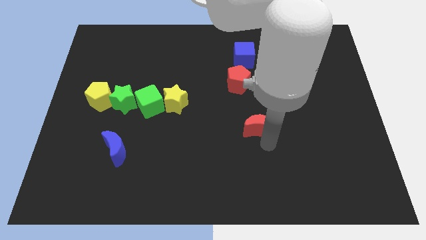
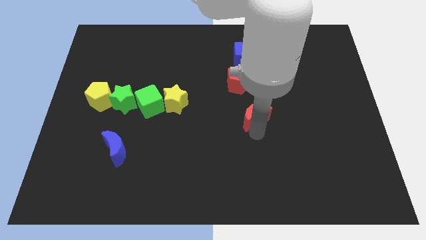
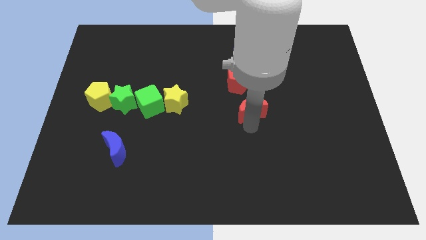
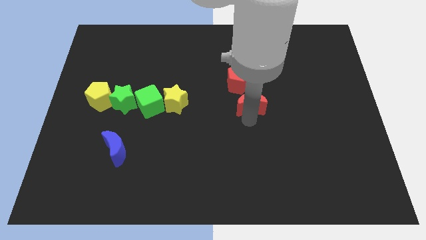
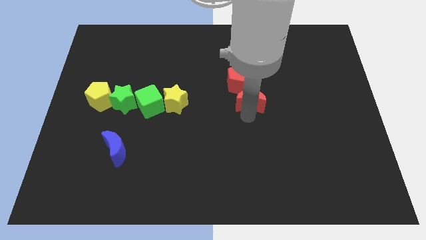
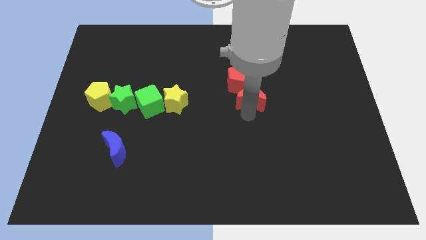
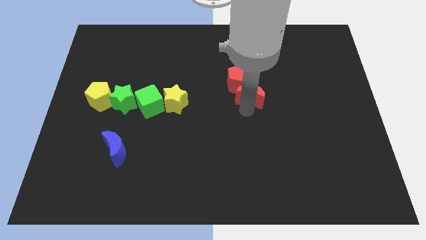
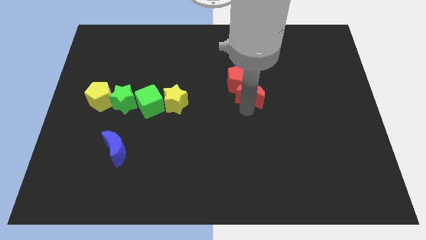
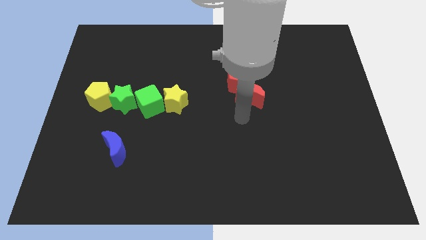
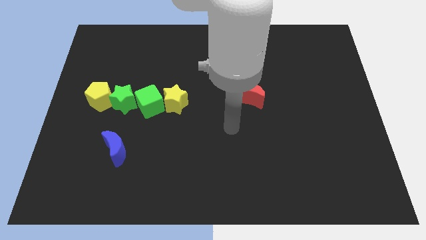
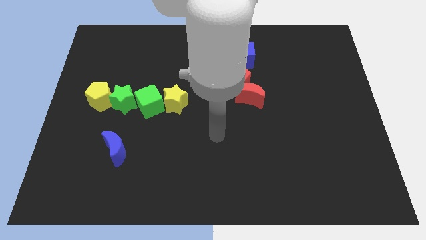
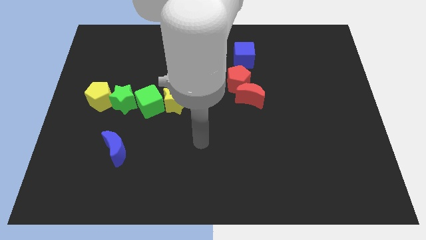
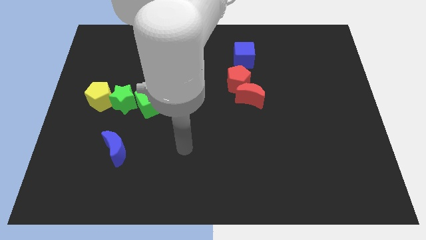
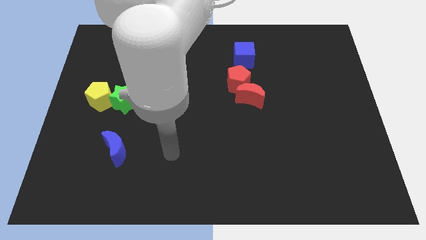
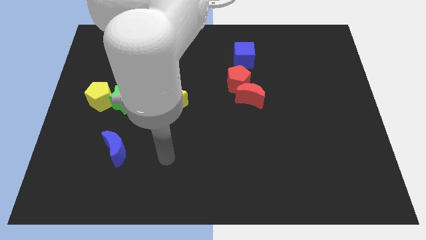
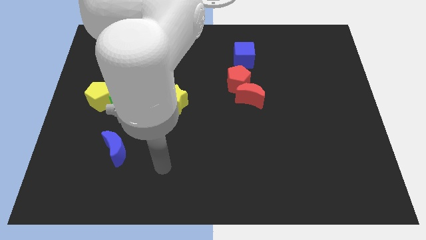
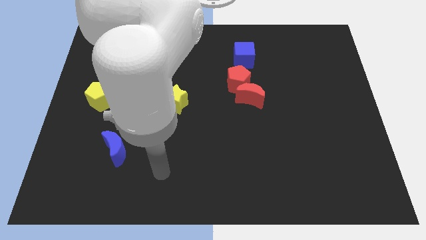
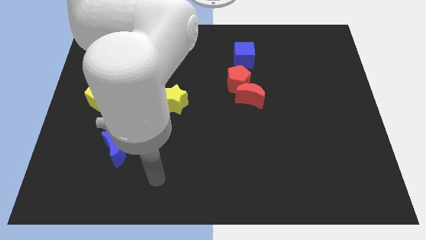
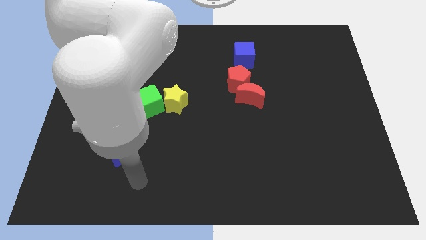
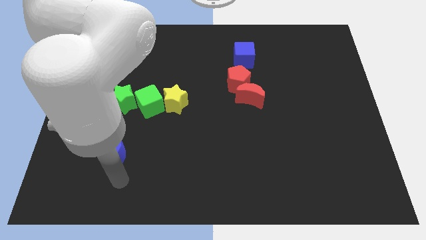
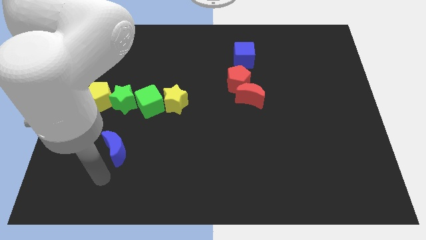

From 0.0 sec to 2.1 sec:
place red moon below the red pentagon

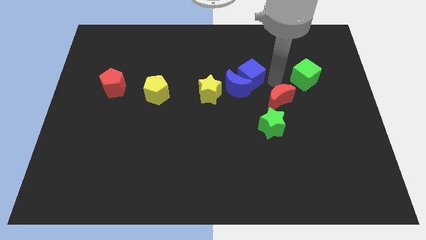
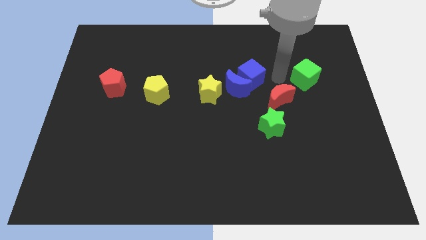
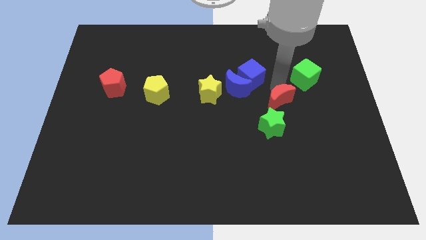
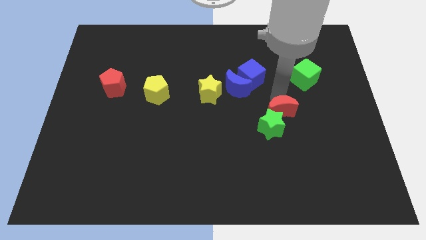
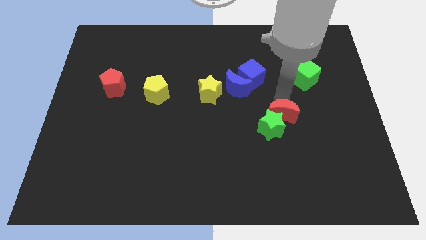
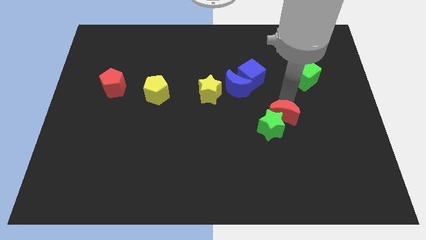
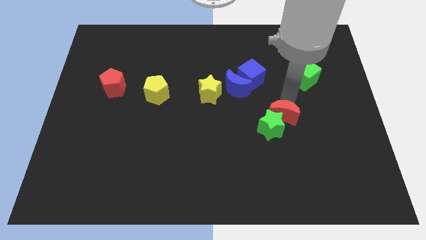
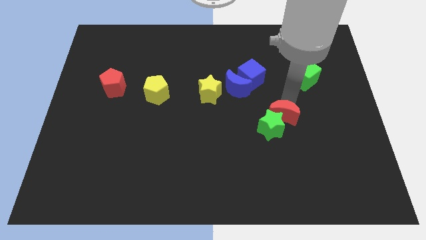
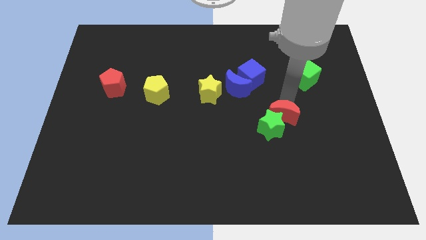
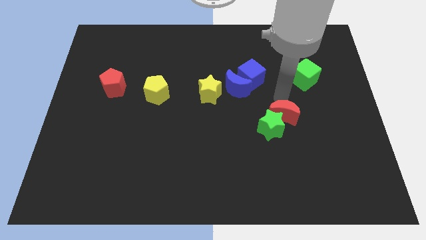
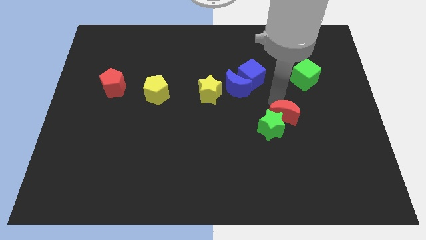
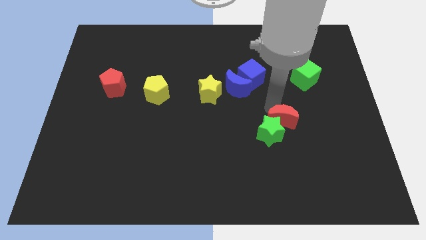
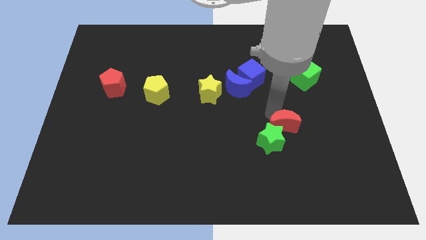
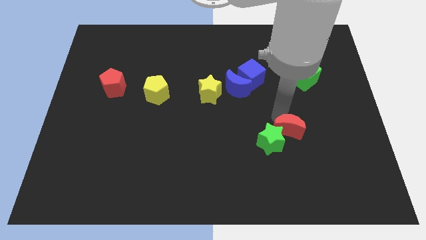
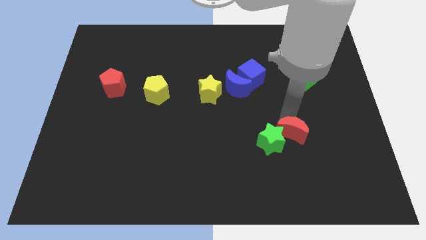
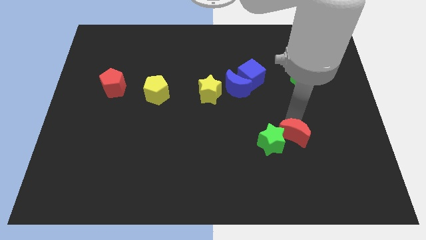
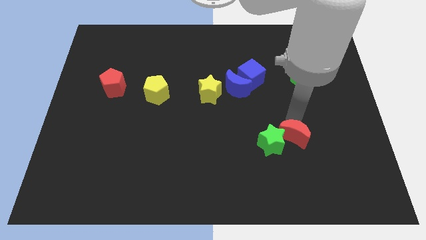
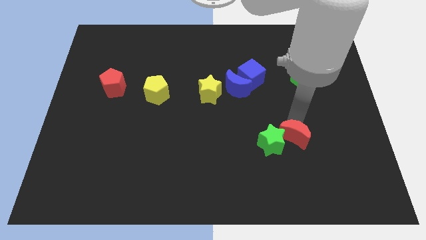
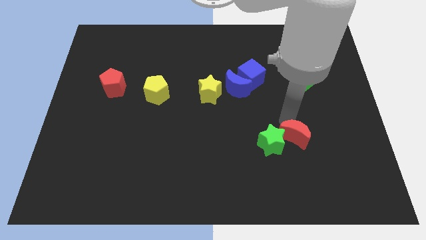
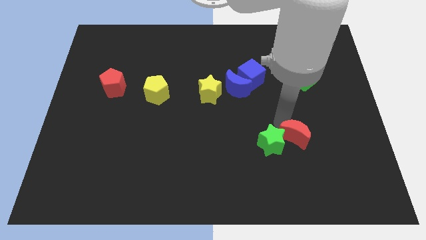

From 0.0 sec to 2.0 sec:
push the red moon into the green star together

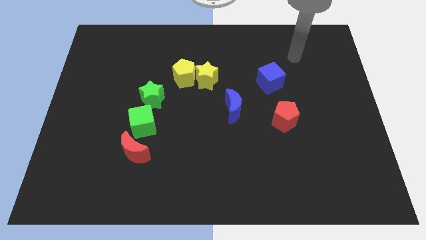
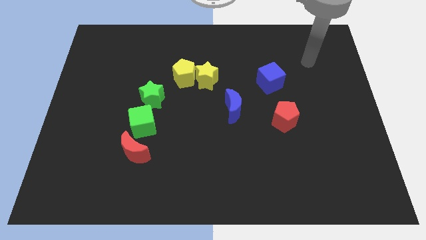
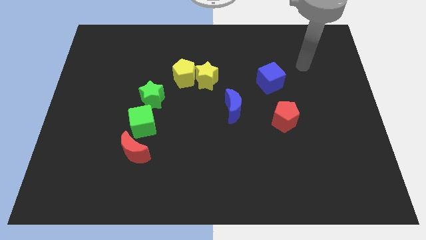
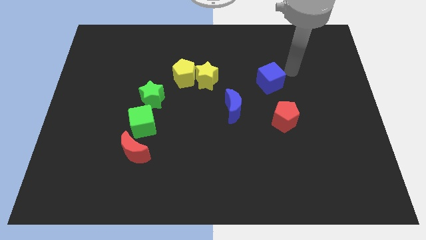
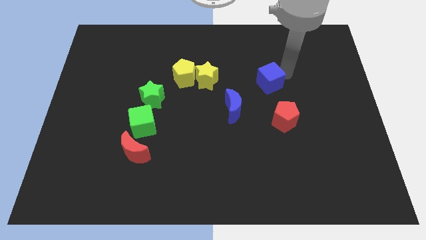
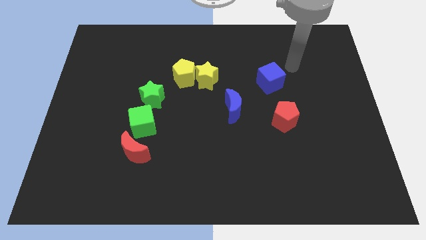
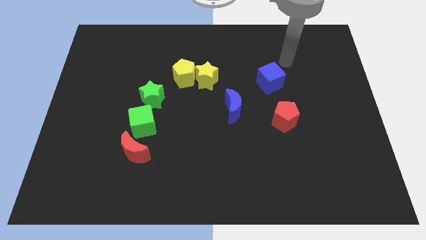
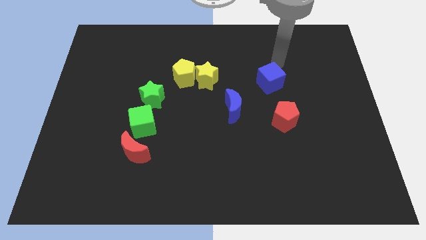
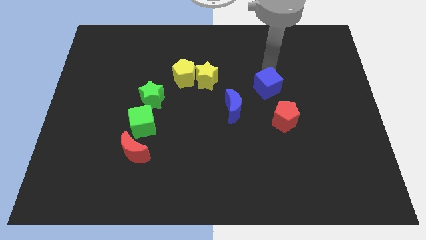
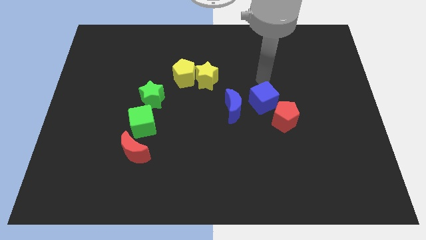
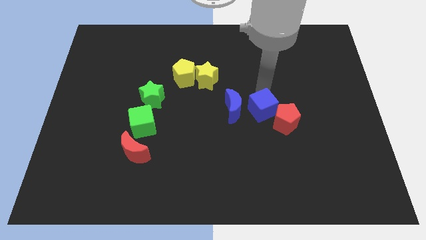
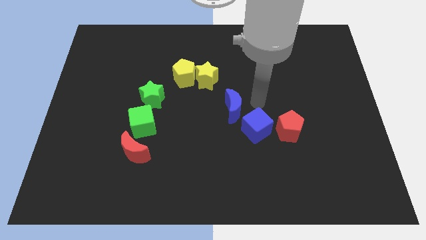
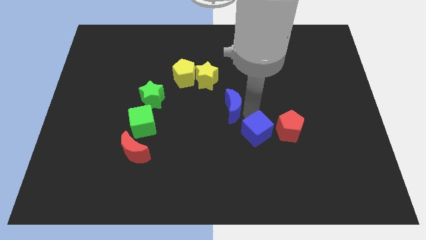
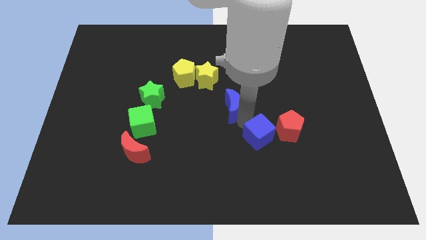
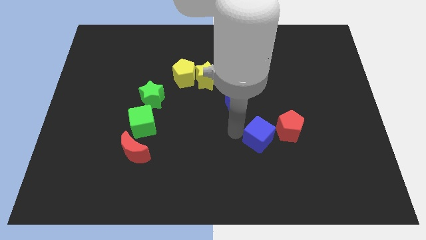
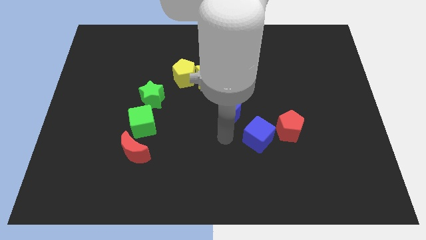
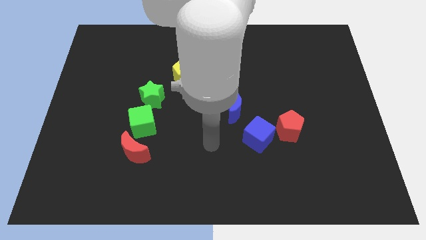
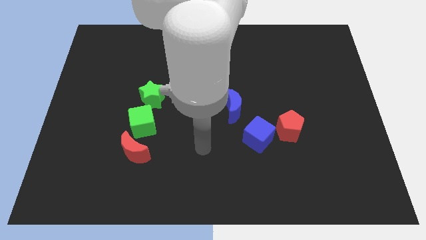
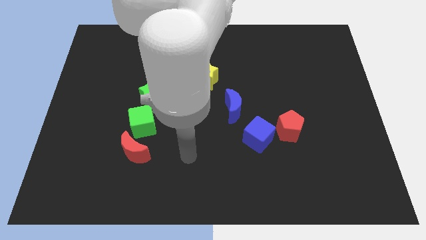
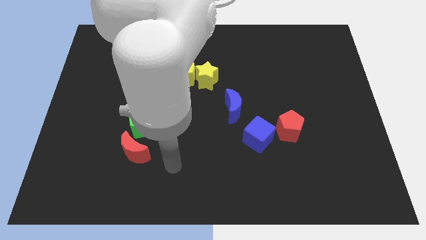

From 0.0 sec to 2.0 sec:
move the blue cube into the red pentagon

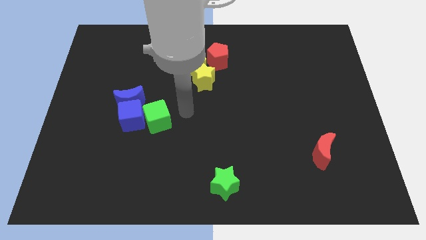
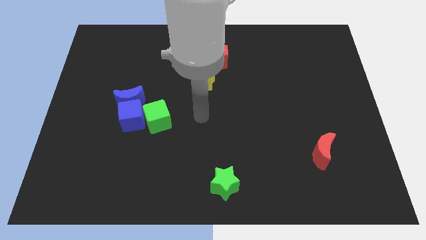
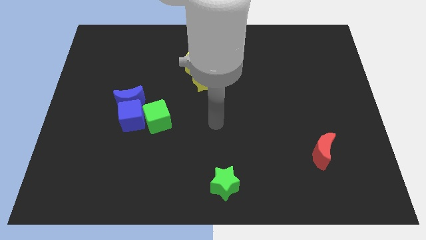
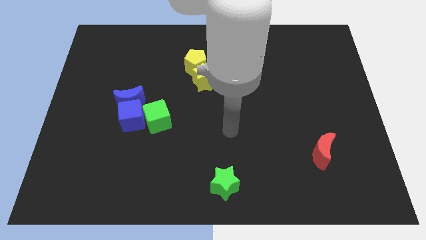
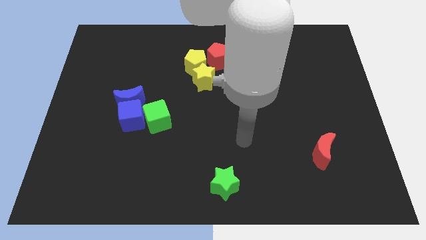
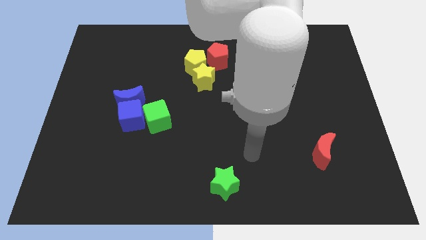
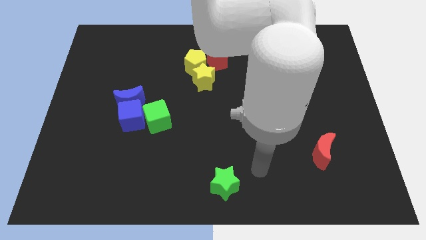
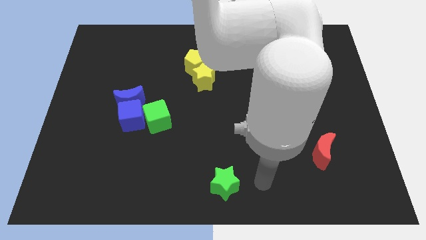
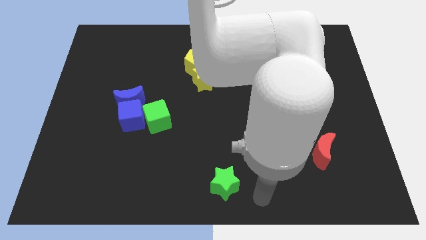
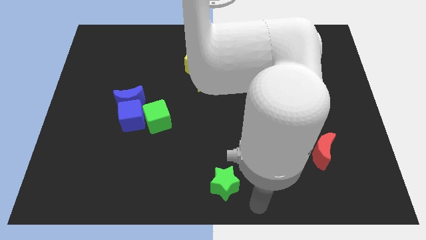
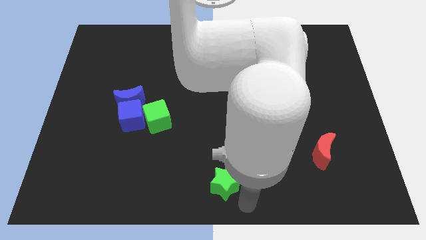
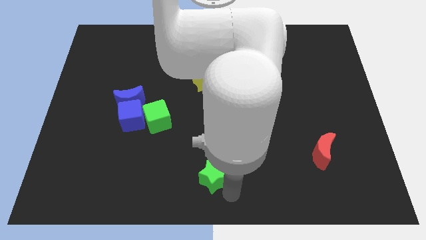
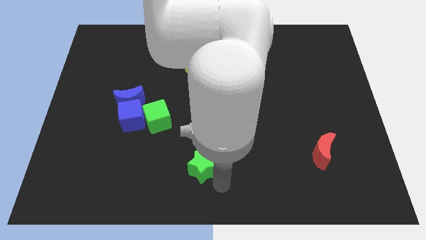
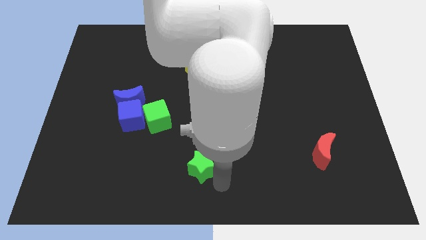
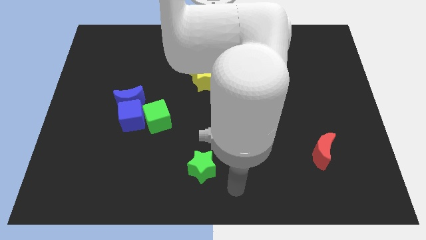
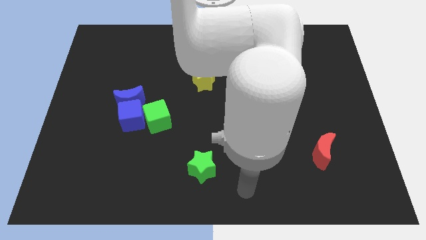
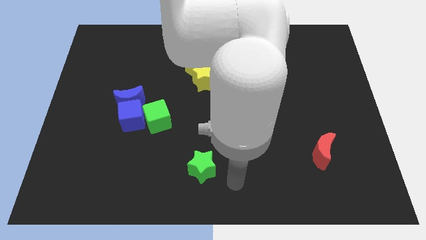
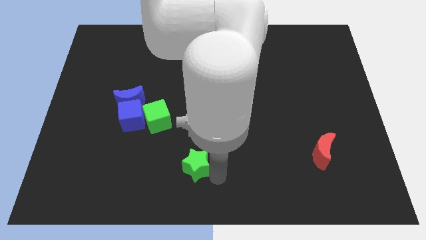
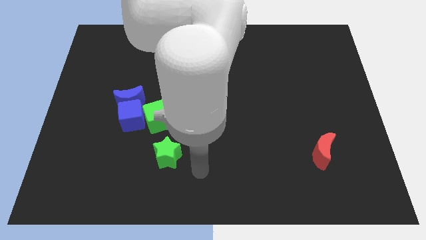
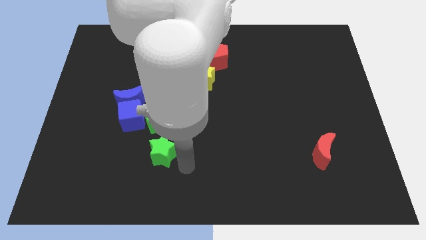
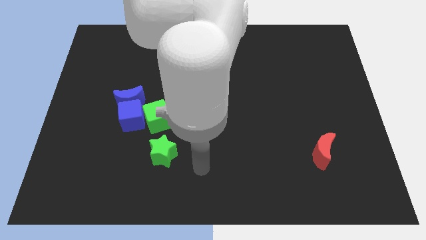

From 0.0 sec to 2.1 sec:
push the green star to the bottom of the green cube

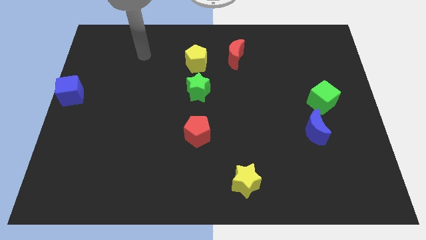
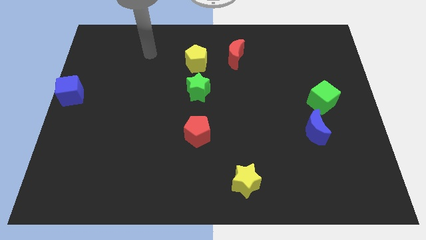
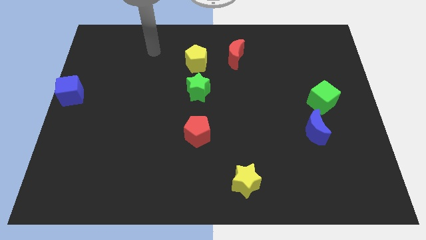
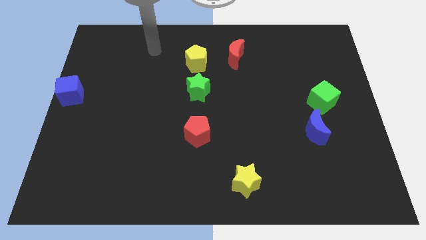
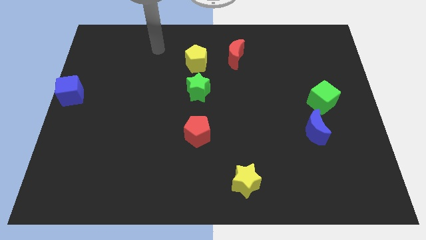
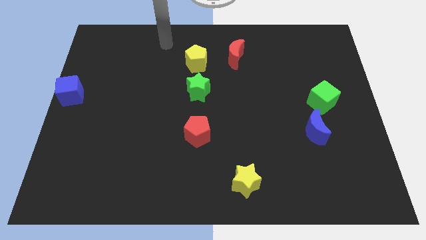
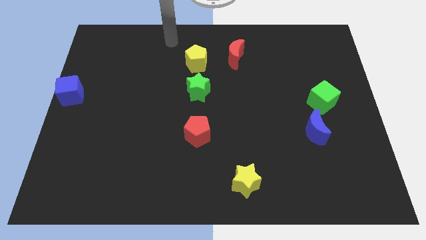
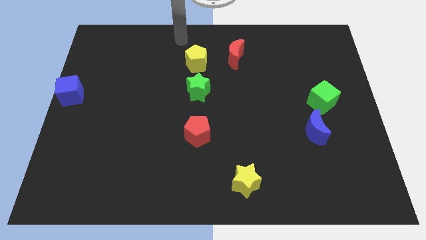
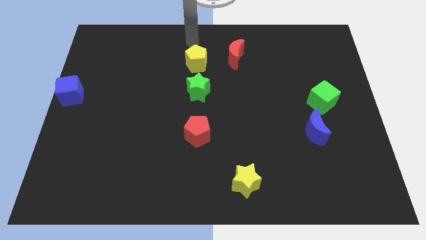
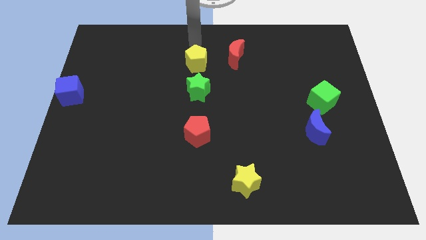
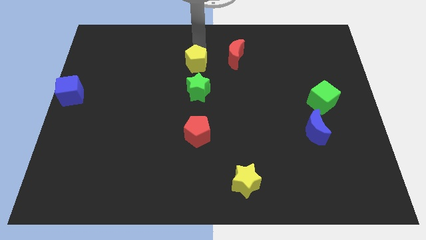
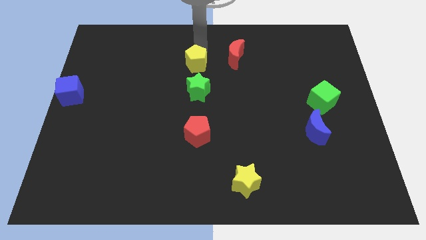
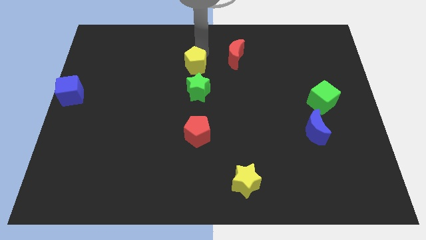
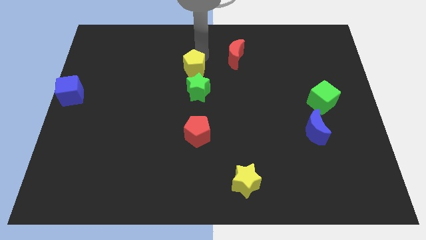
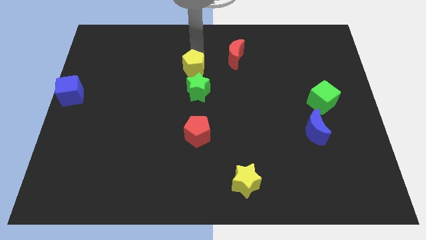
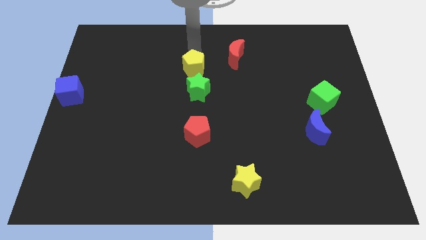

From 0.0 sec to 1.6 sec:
move the yellow pentagon towards the green star
